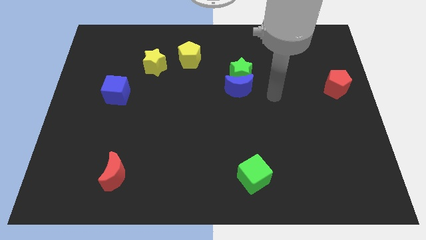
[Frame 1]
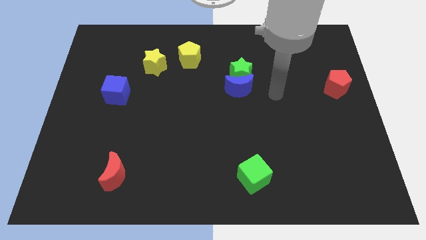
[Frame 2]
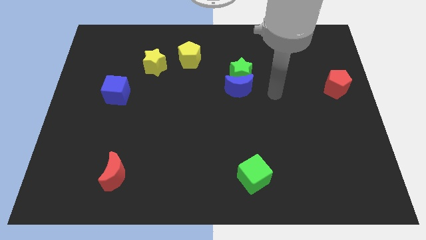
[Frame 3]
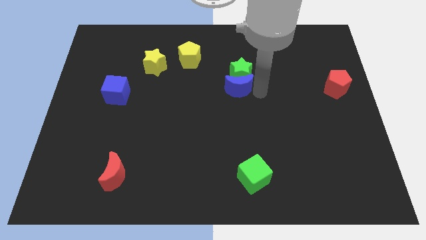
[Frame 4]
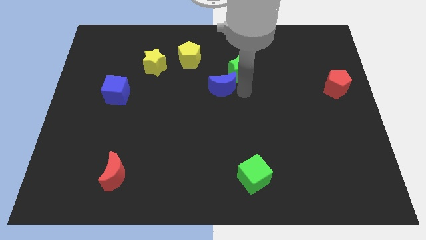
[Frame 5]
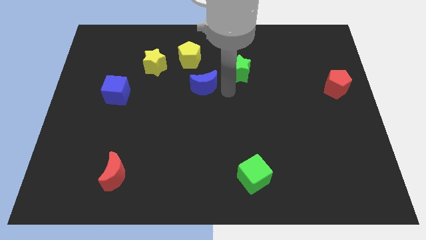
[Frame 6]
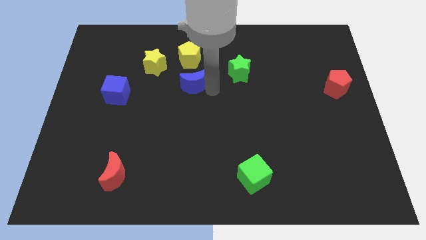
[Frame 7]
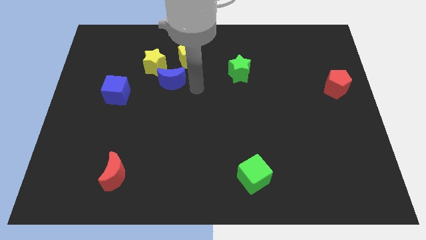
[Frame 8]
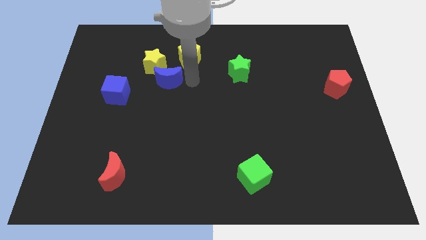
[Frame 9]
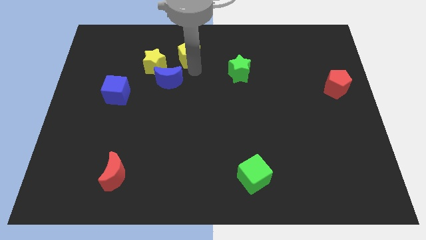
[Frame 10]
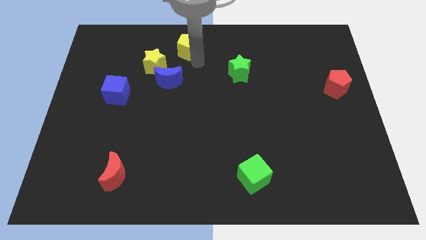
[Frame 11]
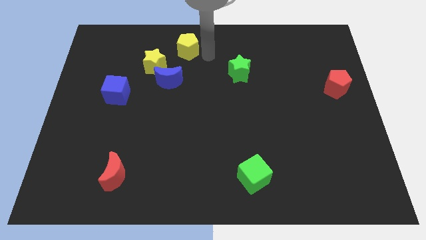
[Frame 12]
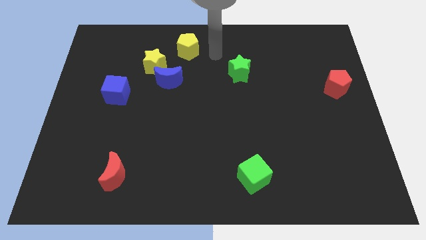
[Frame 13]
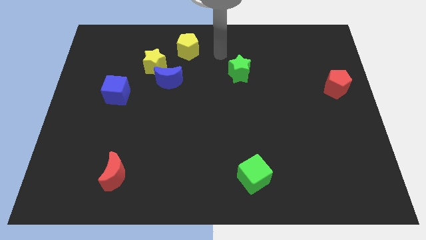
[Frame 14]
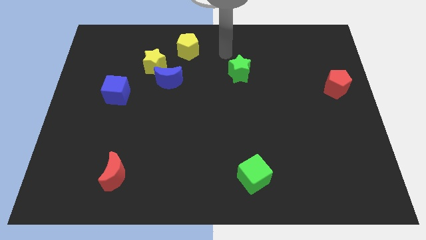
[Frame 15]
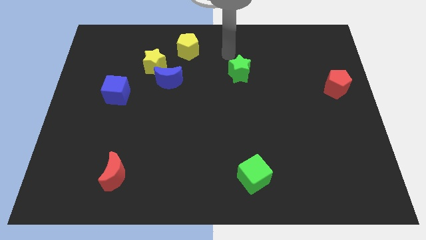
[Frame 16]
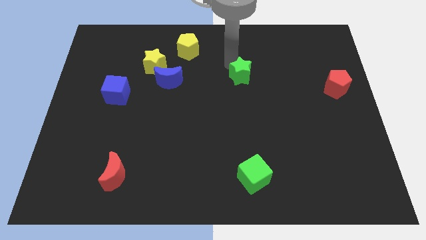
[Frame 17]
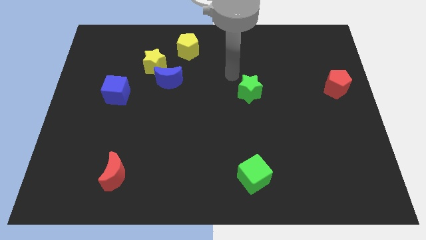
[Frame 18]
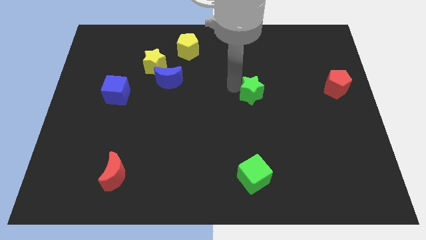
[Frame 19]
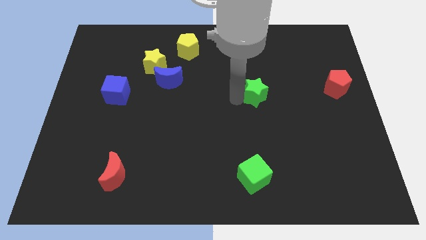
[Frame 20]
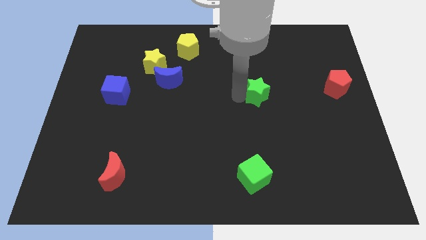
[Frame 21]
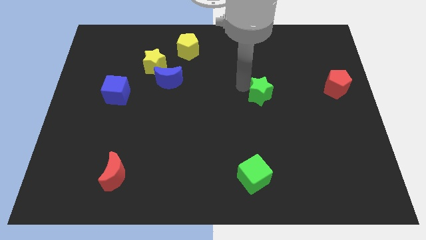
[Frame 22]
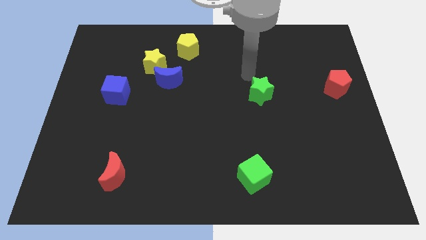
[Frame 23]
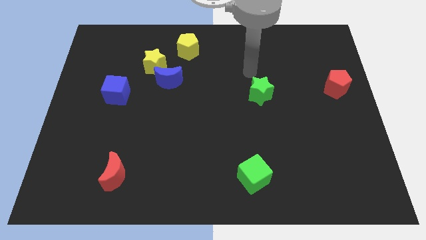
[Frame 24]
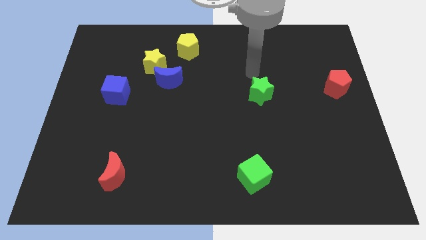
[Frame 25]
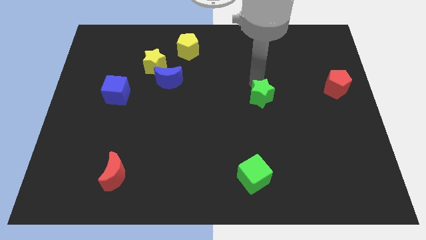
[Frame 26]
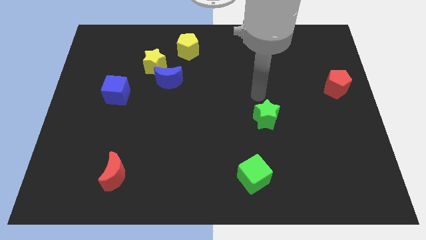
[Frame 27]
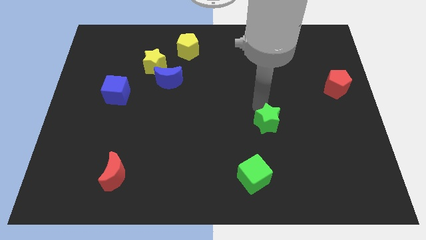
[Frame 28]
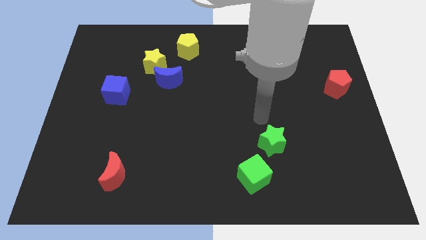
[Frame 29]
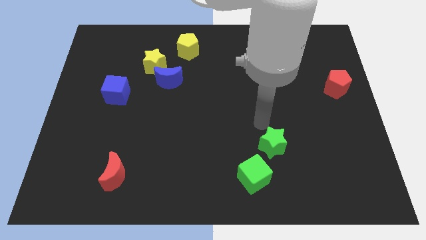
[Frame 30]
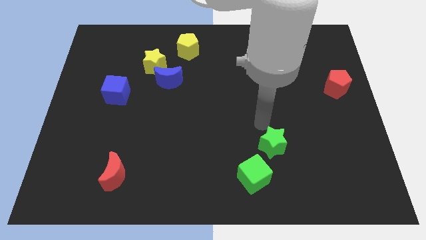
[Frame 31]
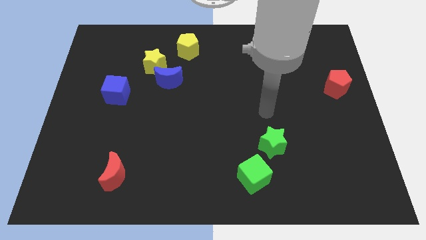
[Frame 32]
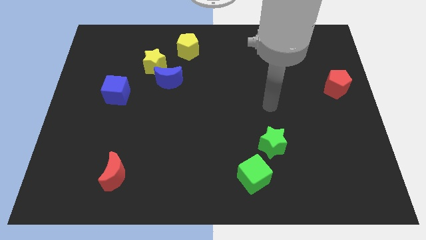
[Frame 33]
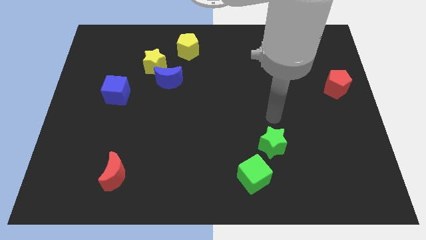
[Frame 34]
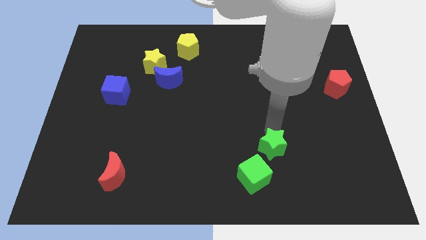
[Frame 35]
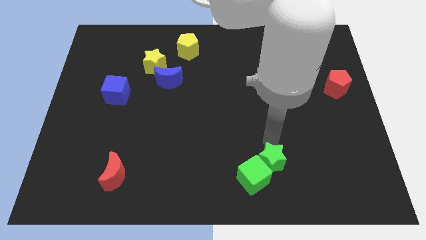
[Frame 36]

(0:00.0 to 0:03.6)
move the green star into the top right side of the green cube

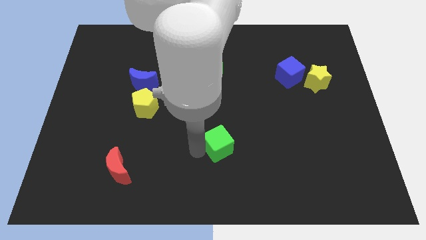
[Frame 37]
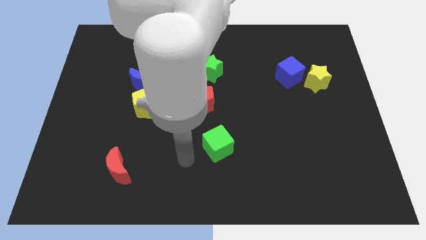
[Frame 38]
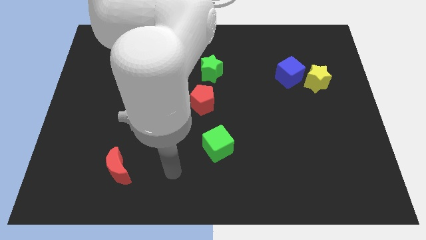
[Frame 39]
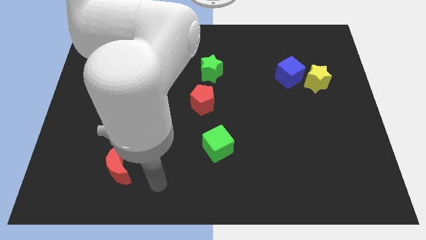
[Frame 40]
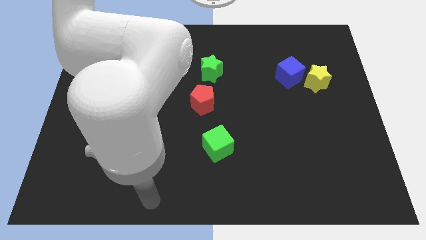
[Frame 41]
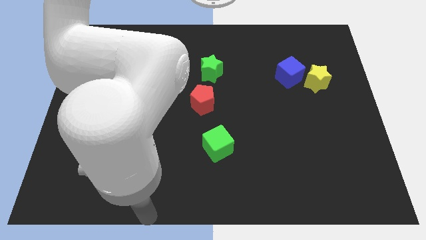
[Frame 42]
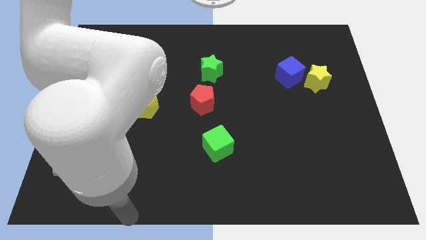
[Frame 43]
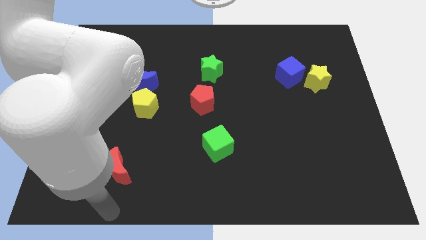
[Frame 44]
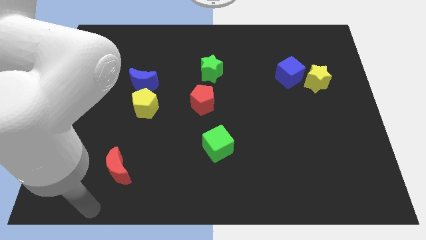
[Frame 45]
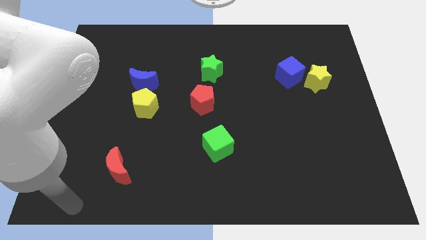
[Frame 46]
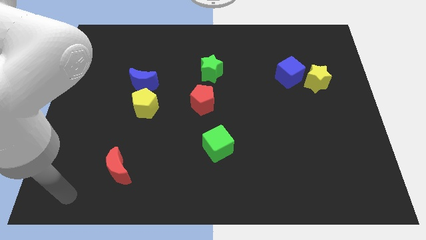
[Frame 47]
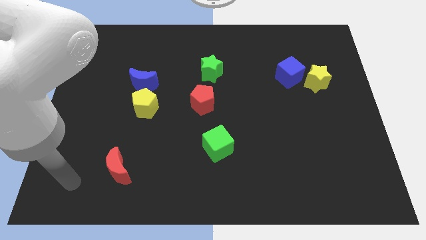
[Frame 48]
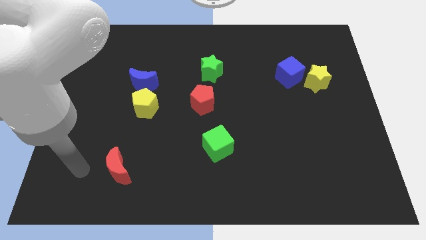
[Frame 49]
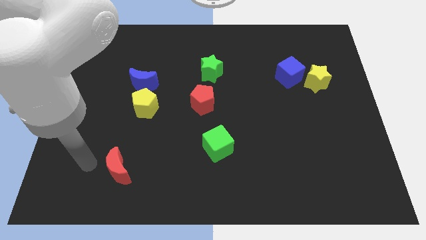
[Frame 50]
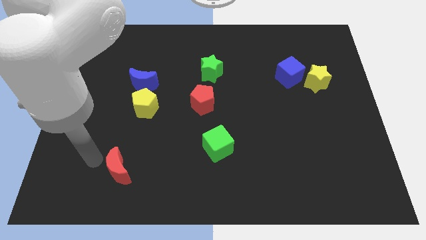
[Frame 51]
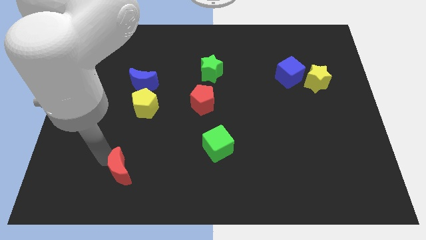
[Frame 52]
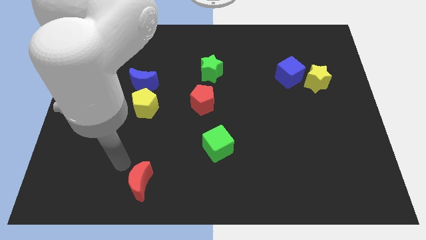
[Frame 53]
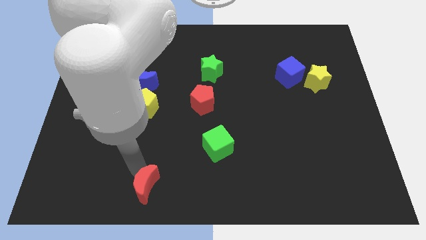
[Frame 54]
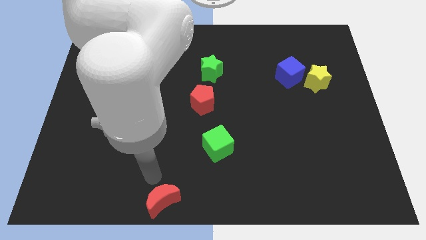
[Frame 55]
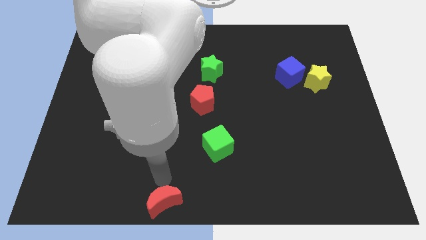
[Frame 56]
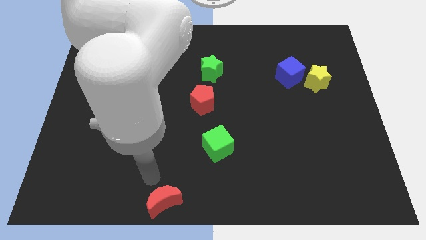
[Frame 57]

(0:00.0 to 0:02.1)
push the red crescent towards the center bottom of the board

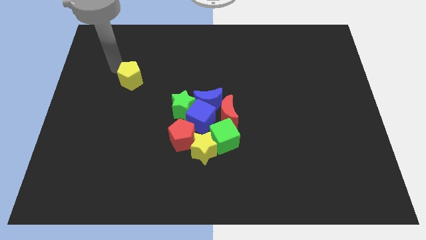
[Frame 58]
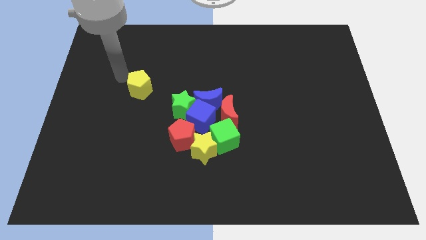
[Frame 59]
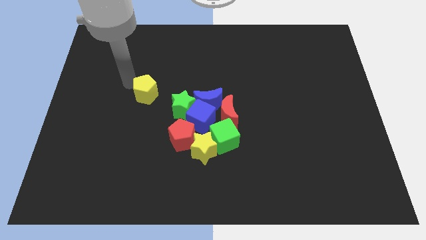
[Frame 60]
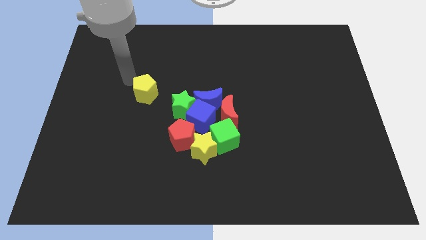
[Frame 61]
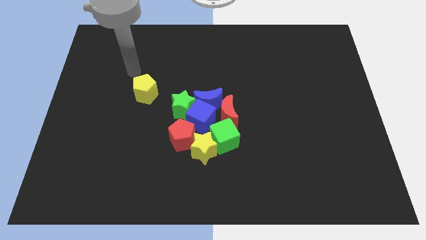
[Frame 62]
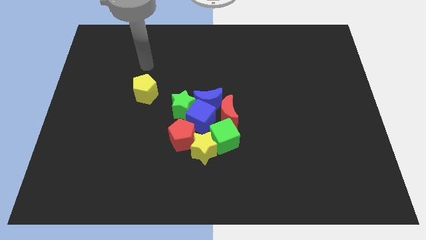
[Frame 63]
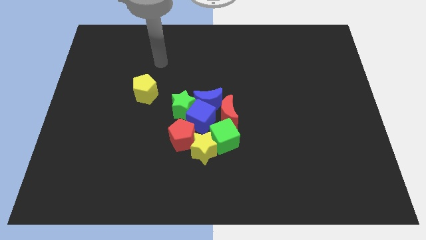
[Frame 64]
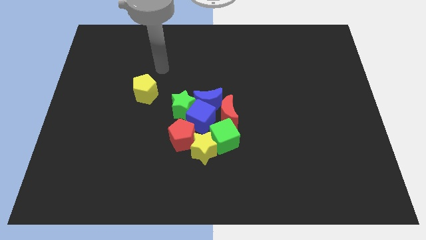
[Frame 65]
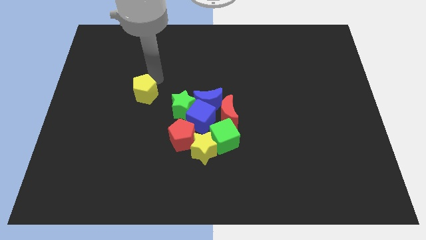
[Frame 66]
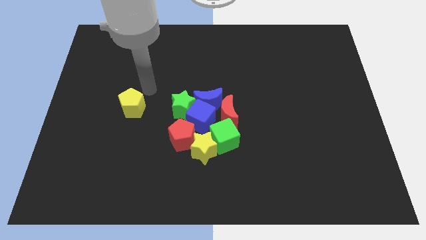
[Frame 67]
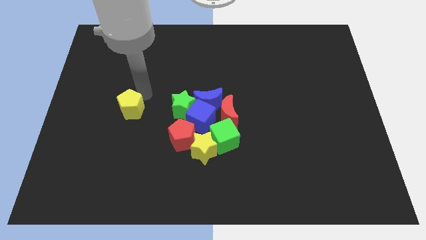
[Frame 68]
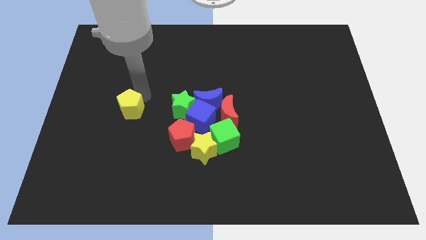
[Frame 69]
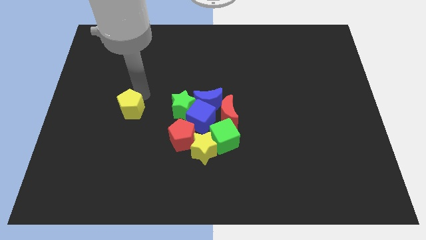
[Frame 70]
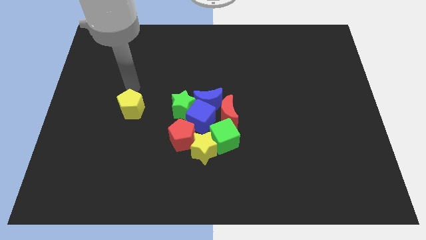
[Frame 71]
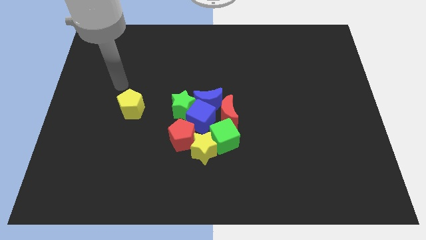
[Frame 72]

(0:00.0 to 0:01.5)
move yellow pentagon to the left of green star

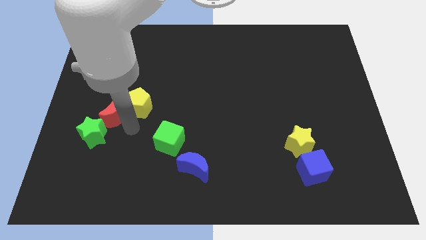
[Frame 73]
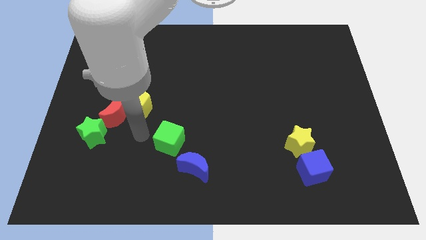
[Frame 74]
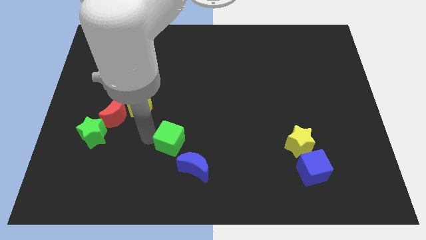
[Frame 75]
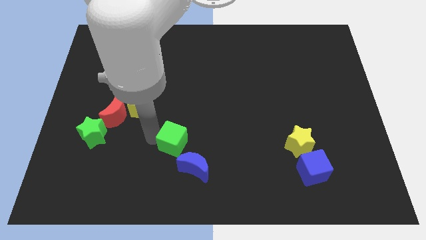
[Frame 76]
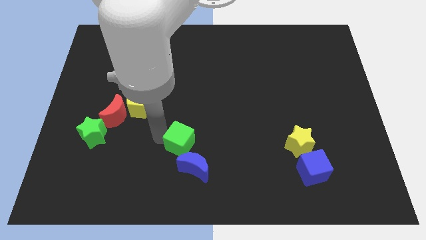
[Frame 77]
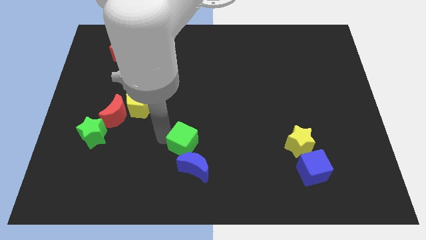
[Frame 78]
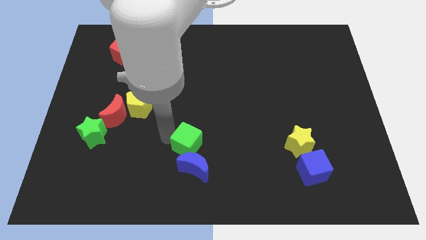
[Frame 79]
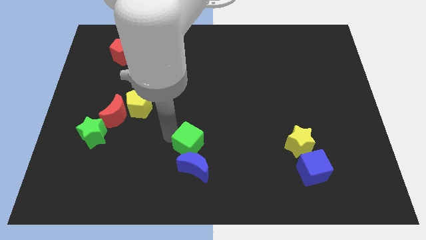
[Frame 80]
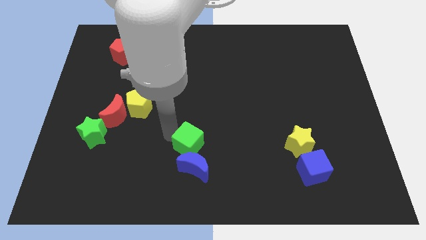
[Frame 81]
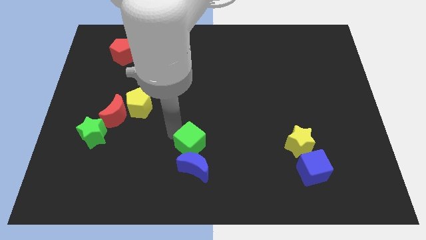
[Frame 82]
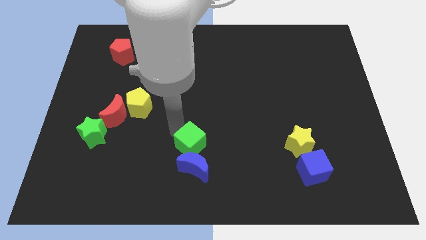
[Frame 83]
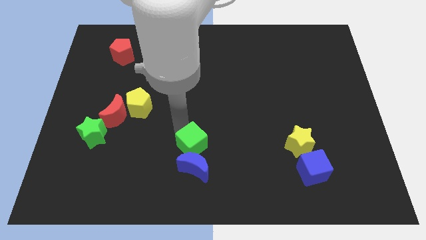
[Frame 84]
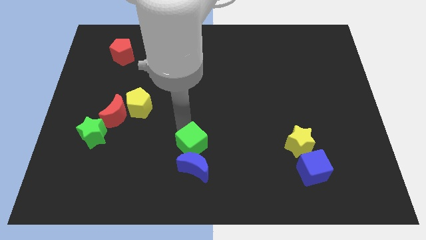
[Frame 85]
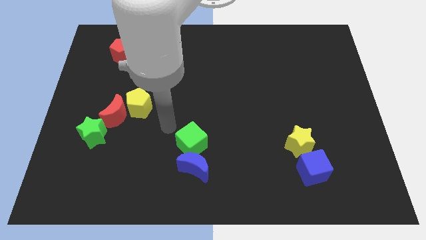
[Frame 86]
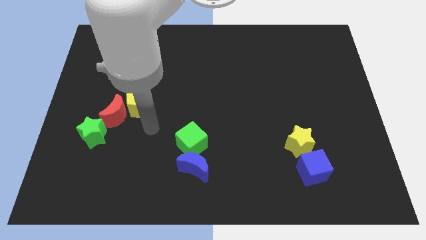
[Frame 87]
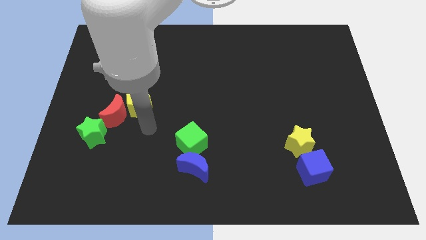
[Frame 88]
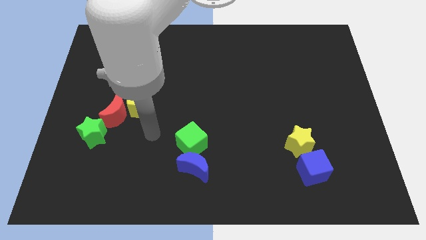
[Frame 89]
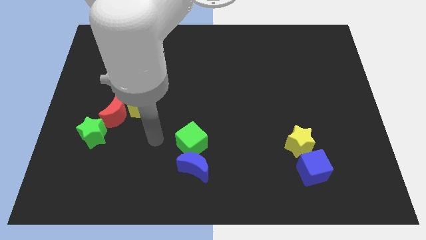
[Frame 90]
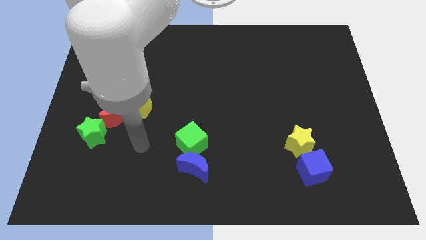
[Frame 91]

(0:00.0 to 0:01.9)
place the green cube above the blue crescent
